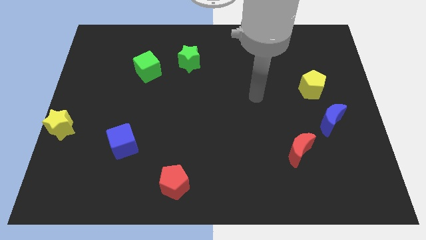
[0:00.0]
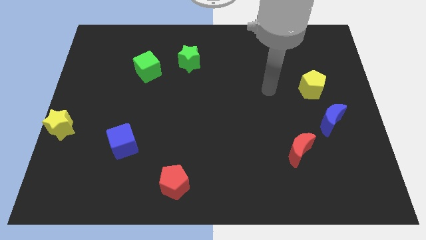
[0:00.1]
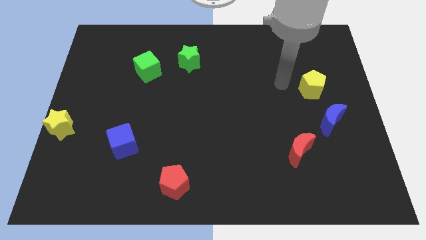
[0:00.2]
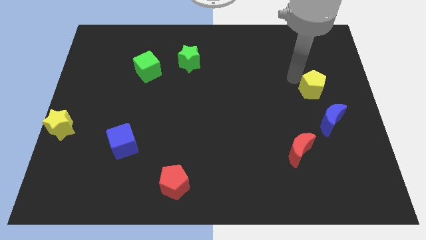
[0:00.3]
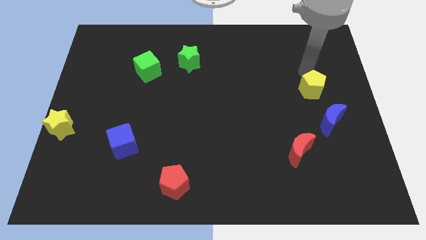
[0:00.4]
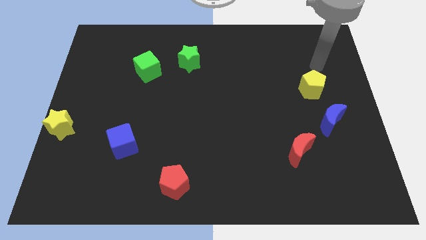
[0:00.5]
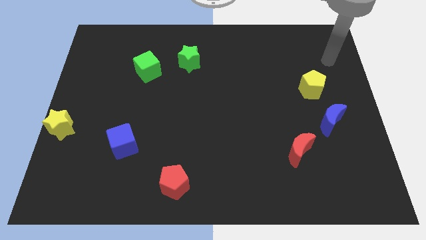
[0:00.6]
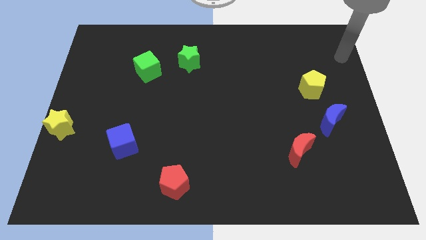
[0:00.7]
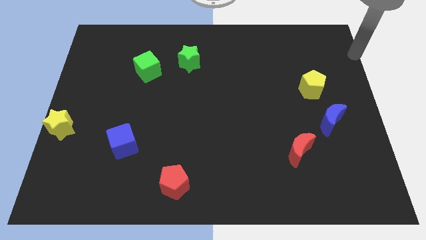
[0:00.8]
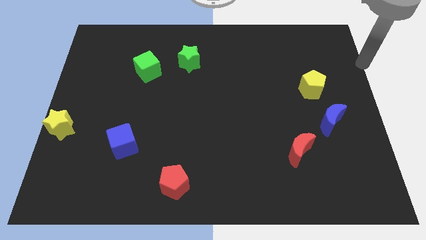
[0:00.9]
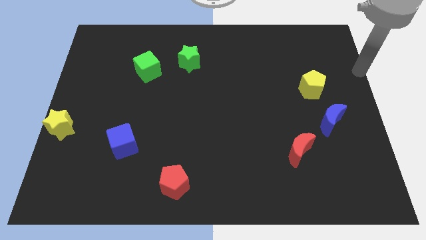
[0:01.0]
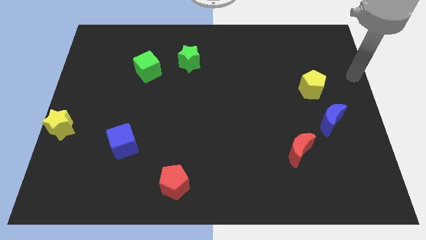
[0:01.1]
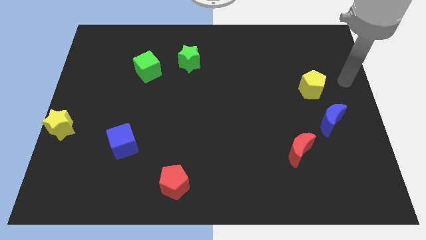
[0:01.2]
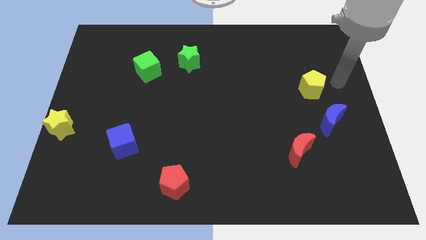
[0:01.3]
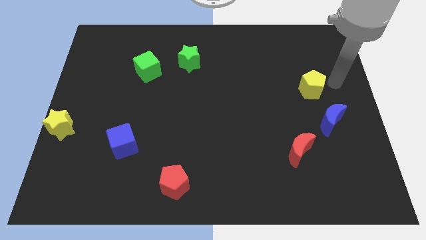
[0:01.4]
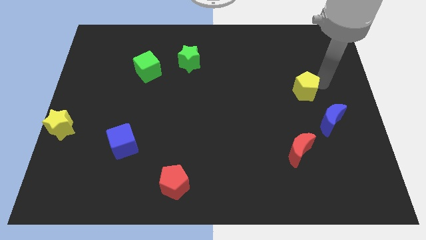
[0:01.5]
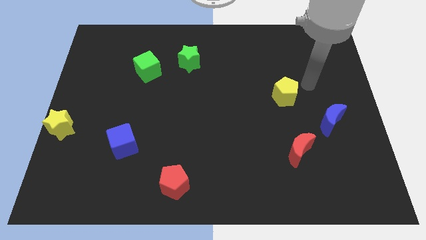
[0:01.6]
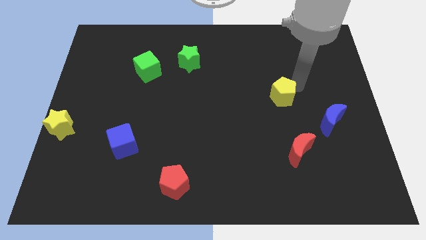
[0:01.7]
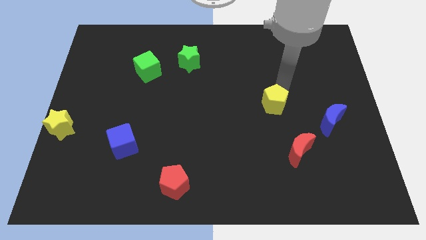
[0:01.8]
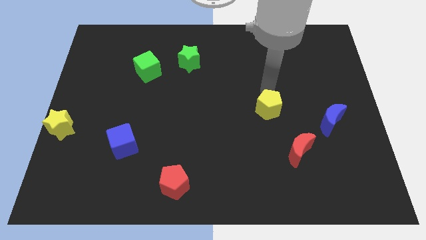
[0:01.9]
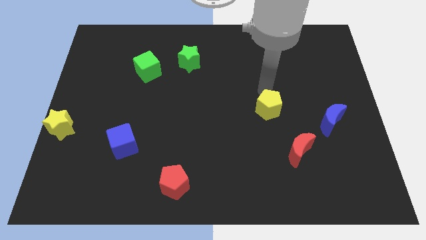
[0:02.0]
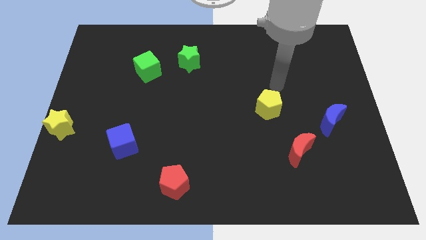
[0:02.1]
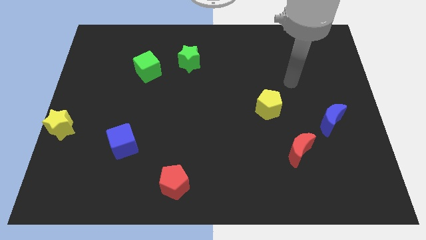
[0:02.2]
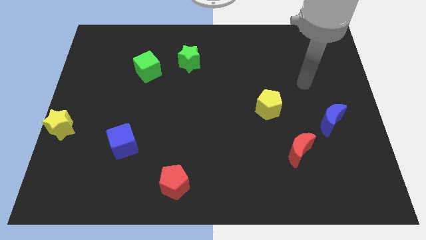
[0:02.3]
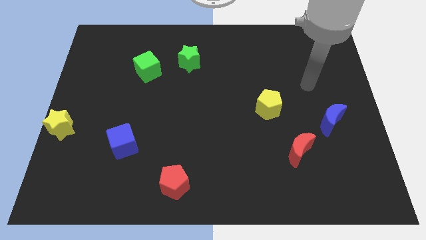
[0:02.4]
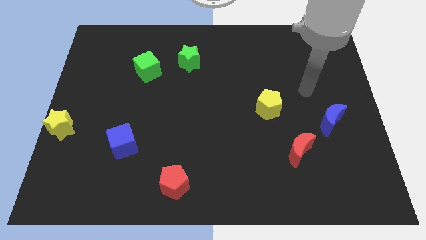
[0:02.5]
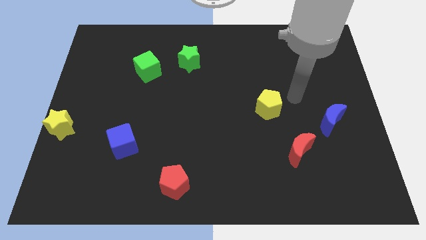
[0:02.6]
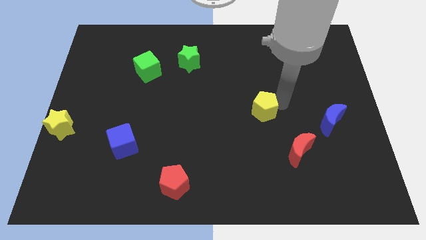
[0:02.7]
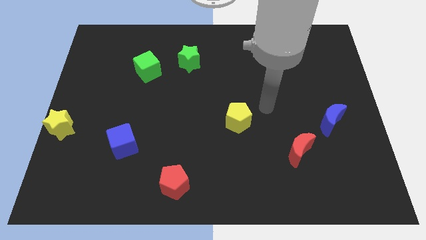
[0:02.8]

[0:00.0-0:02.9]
push the yellow pentagon to the top left of the red moon

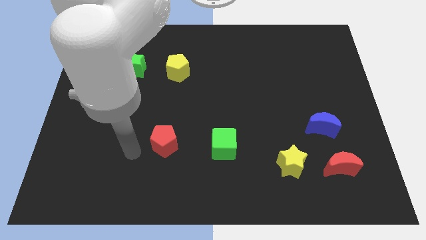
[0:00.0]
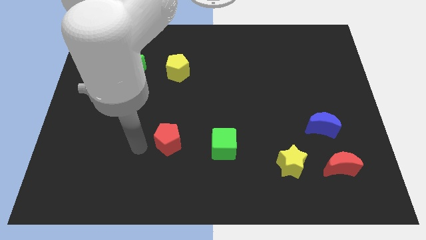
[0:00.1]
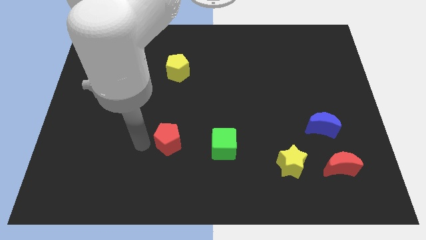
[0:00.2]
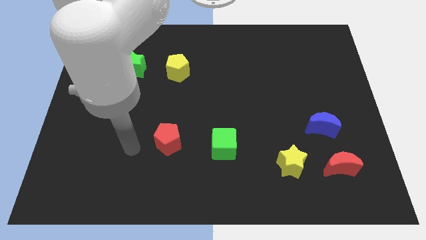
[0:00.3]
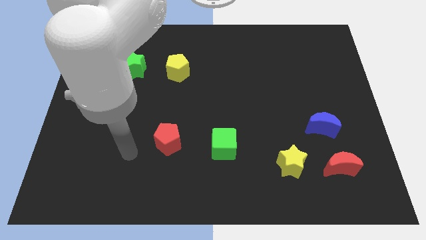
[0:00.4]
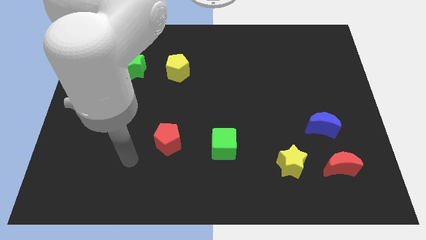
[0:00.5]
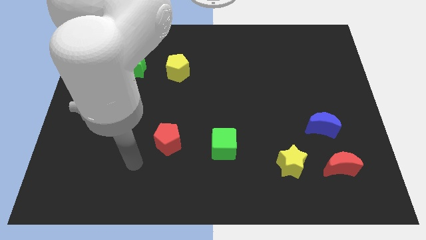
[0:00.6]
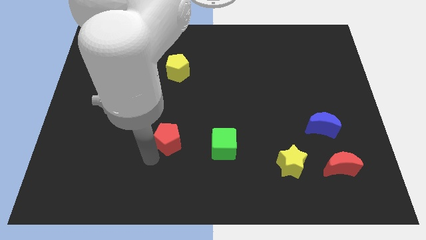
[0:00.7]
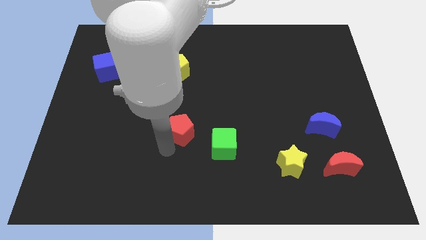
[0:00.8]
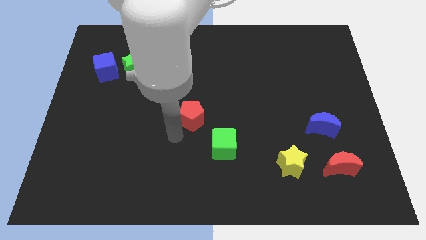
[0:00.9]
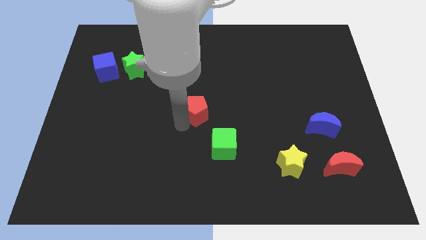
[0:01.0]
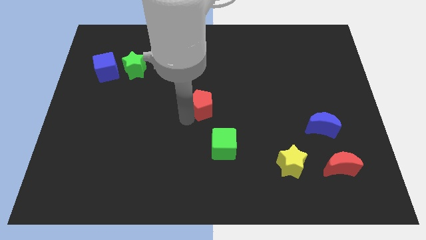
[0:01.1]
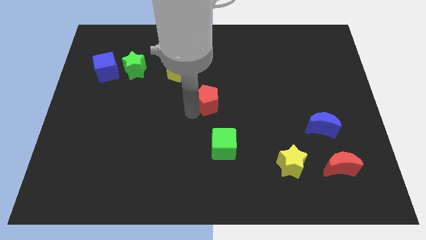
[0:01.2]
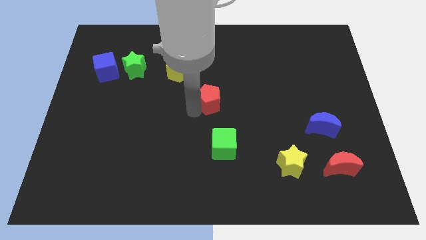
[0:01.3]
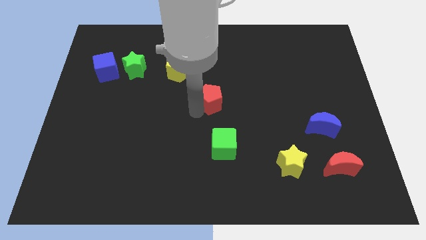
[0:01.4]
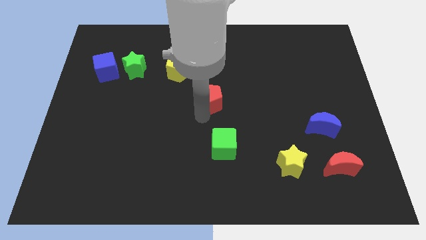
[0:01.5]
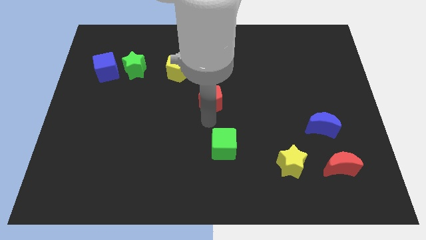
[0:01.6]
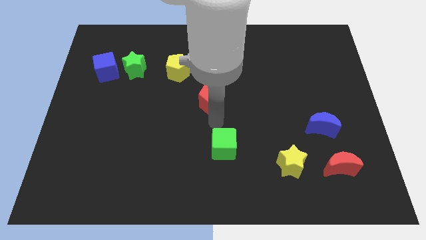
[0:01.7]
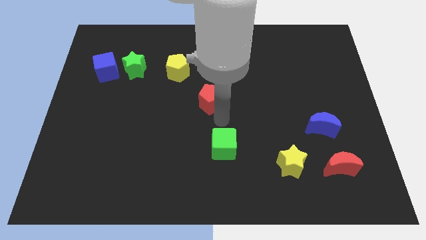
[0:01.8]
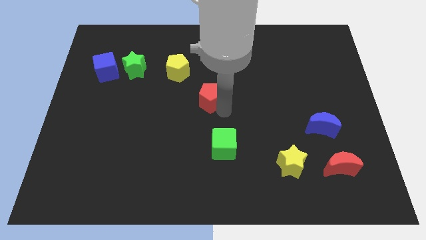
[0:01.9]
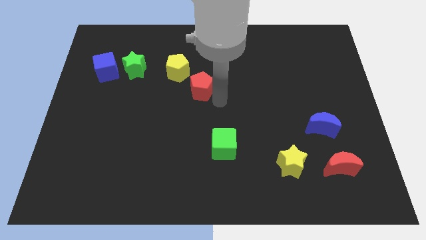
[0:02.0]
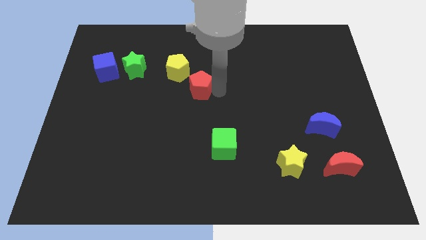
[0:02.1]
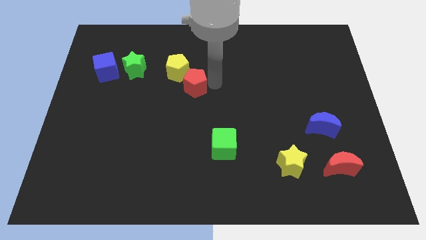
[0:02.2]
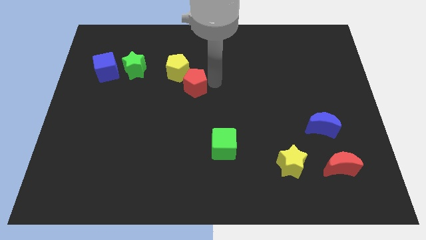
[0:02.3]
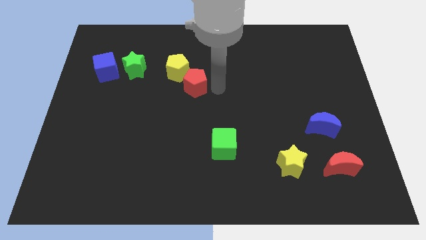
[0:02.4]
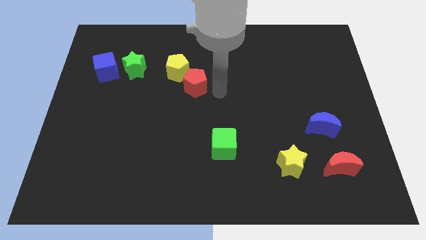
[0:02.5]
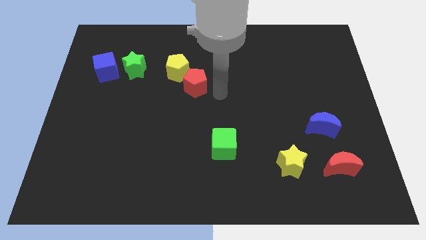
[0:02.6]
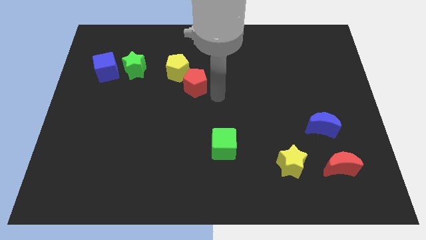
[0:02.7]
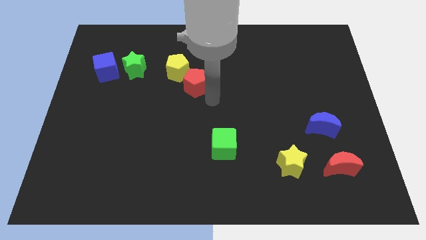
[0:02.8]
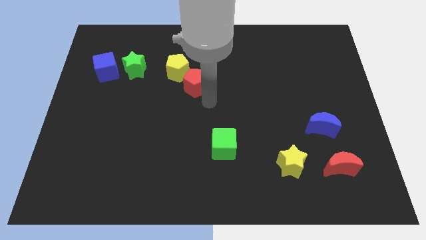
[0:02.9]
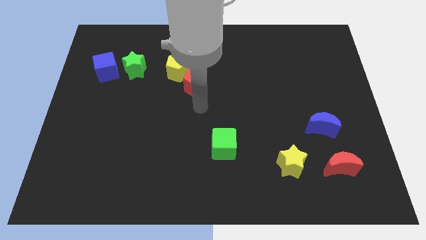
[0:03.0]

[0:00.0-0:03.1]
move the red pentagon to the bottom left side of the yellow pentagon

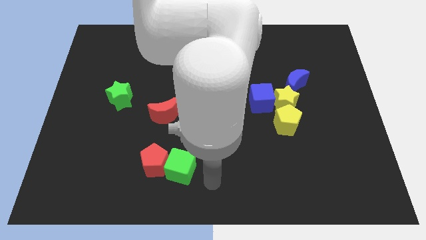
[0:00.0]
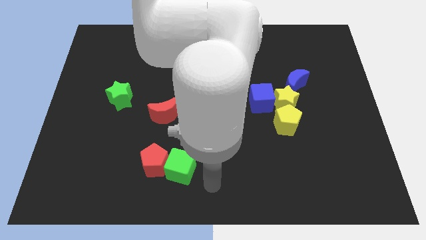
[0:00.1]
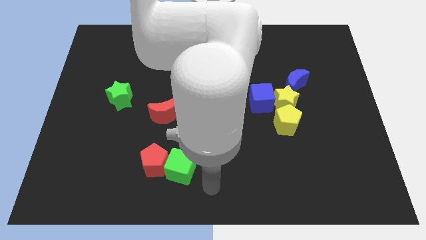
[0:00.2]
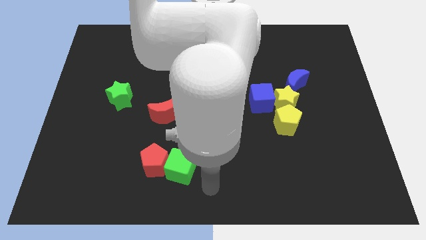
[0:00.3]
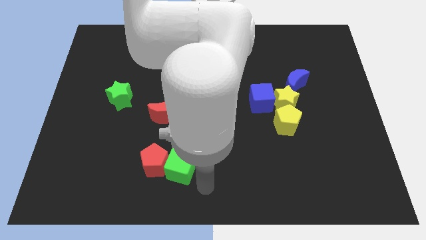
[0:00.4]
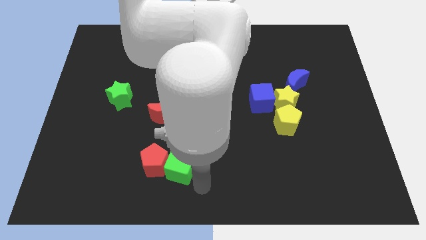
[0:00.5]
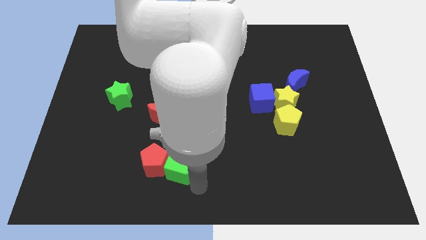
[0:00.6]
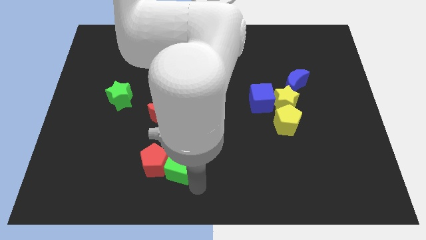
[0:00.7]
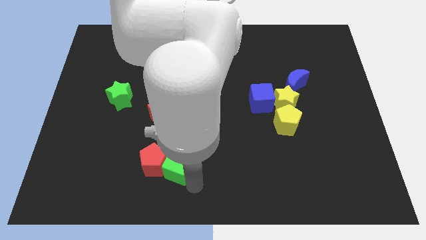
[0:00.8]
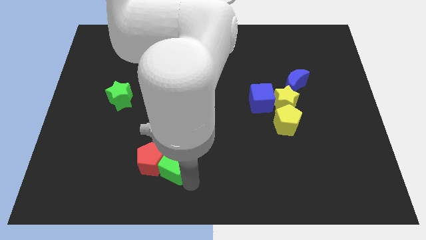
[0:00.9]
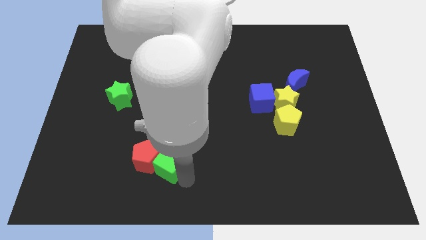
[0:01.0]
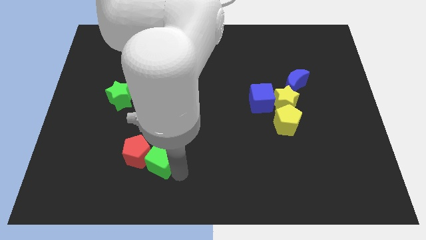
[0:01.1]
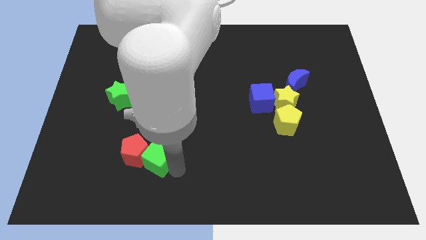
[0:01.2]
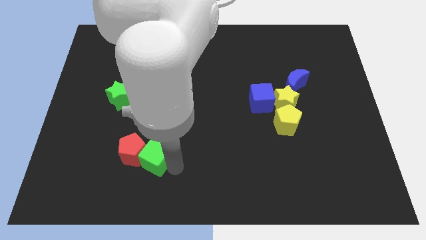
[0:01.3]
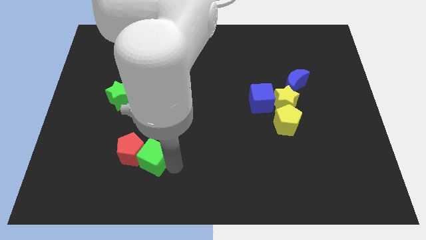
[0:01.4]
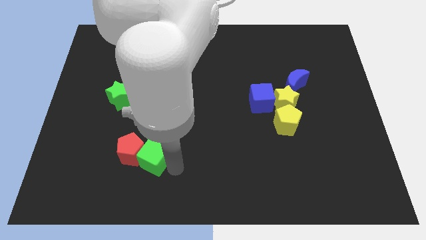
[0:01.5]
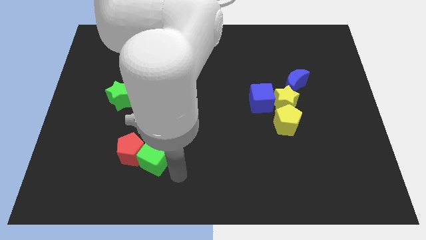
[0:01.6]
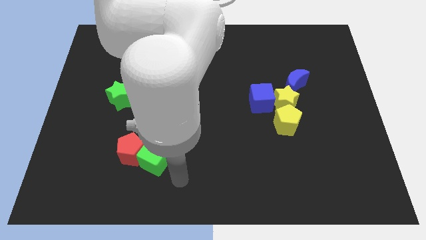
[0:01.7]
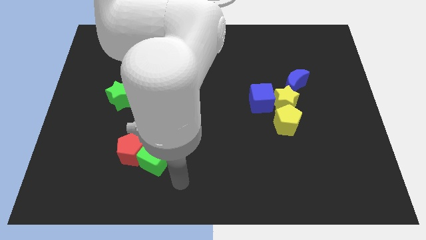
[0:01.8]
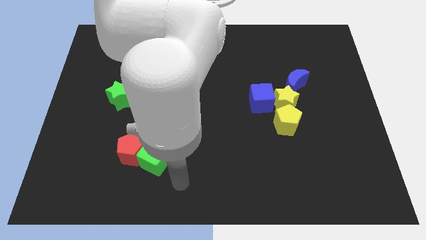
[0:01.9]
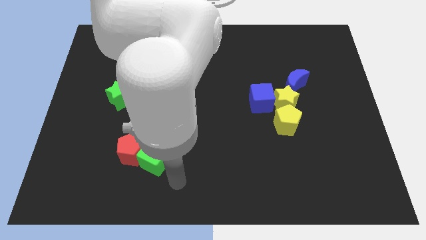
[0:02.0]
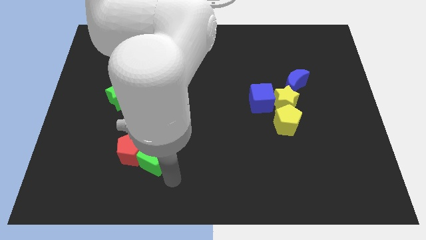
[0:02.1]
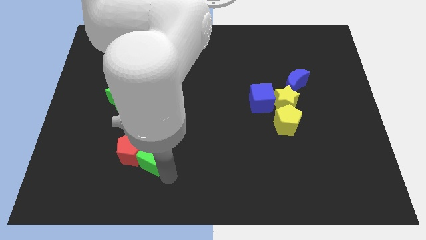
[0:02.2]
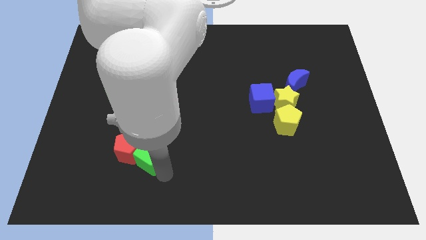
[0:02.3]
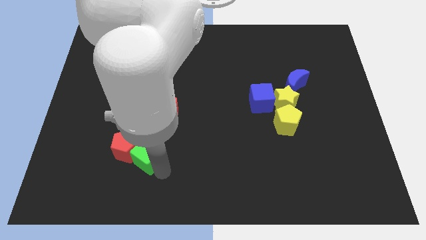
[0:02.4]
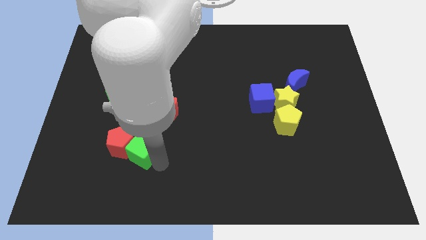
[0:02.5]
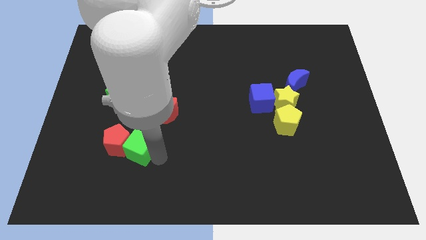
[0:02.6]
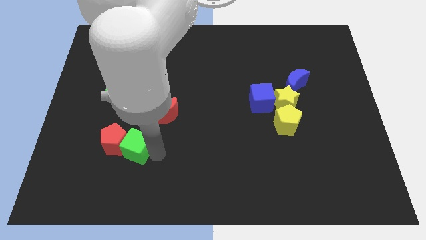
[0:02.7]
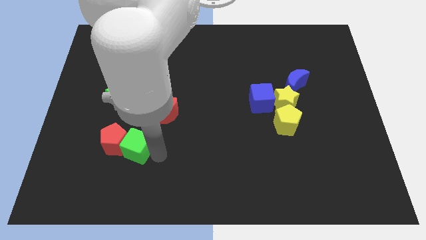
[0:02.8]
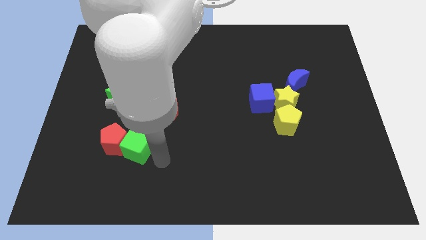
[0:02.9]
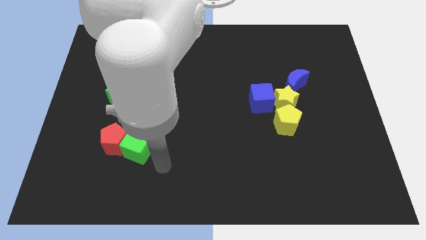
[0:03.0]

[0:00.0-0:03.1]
push the green cube along with red pentagon to the bottom left of the red crescent
